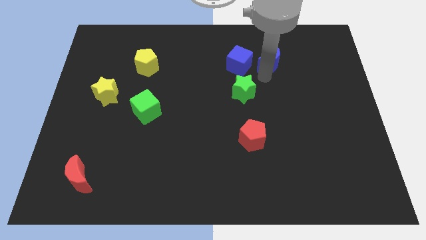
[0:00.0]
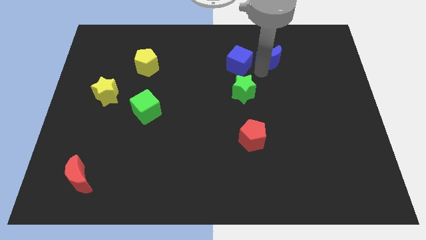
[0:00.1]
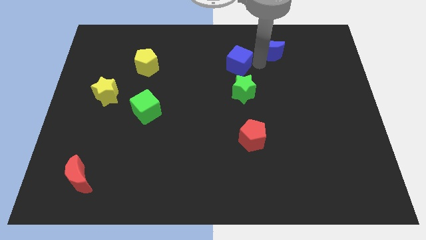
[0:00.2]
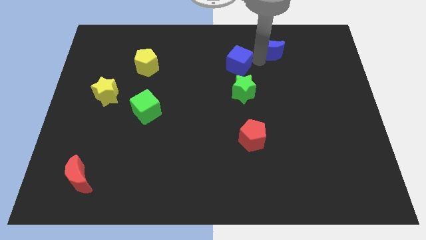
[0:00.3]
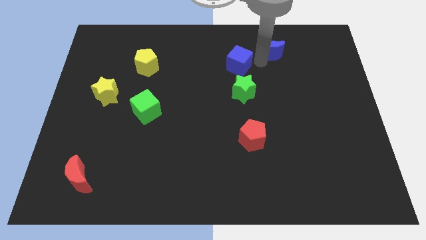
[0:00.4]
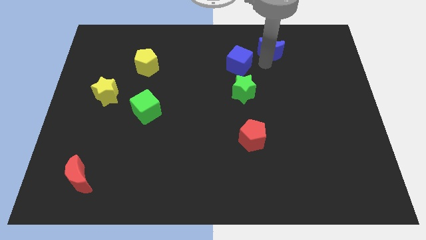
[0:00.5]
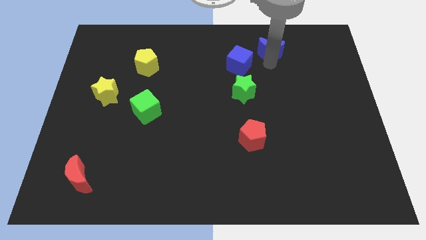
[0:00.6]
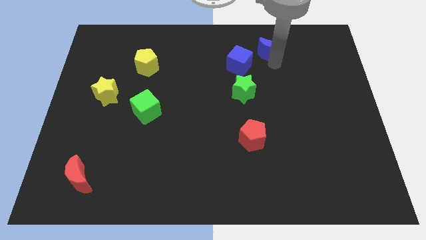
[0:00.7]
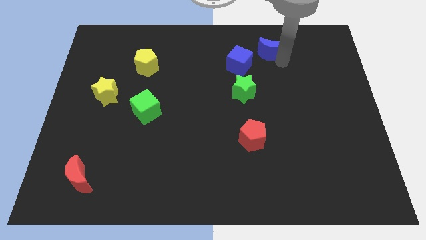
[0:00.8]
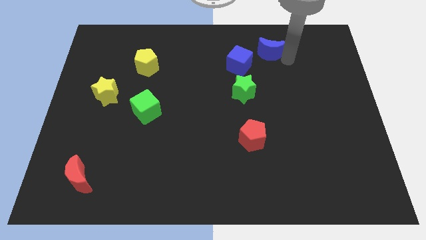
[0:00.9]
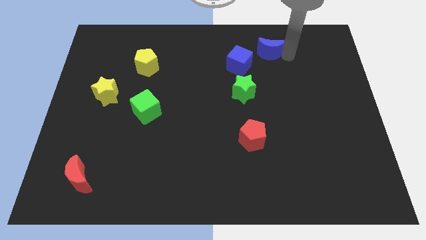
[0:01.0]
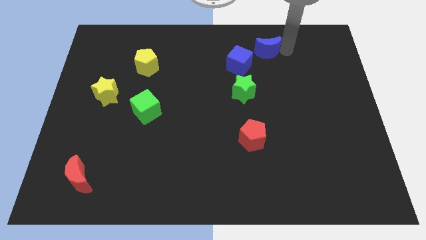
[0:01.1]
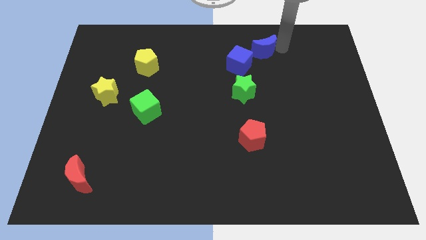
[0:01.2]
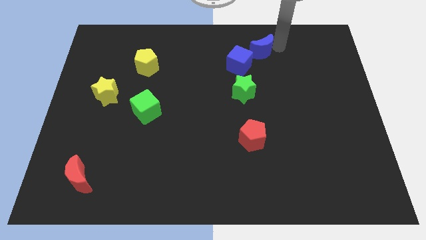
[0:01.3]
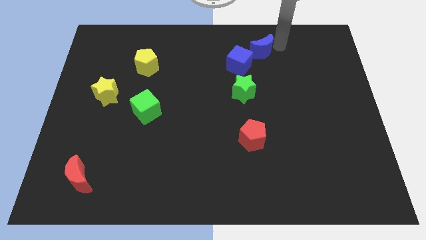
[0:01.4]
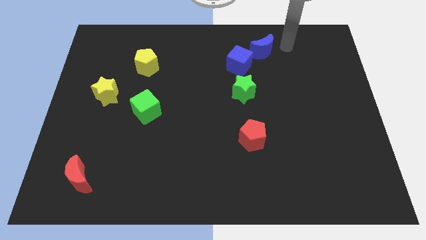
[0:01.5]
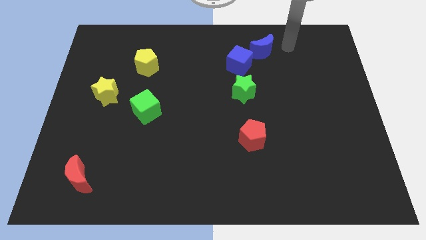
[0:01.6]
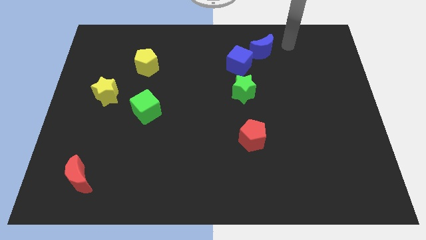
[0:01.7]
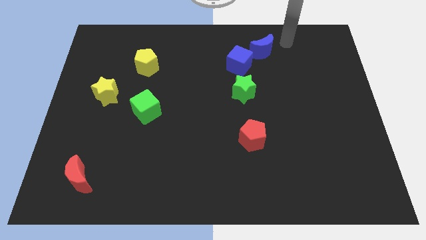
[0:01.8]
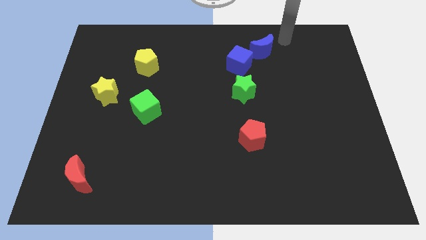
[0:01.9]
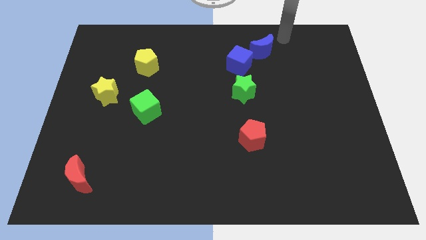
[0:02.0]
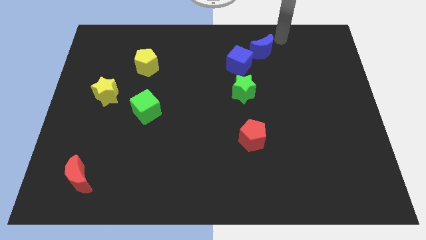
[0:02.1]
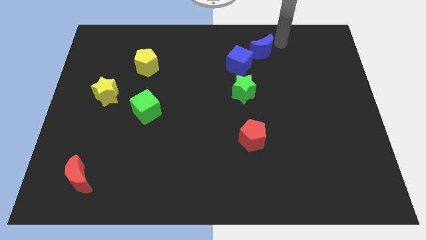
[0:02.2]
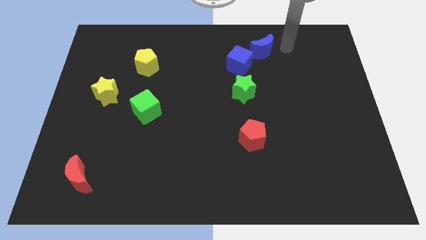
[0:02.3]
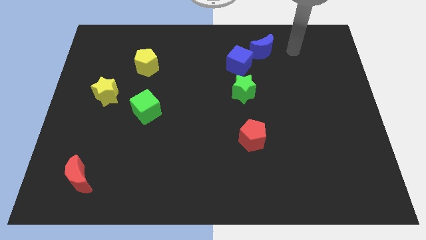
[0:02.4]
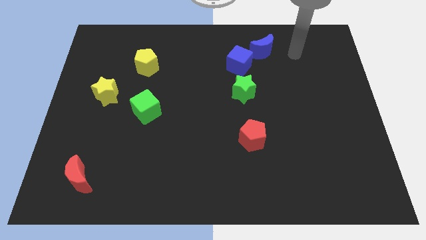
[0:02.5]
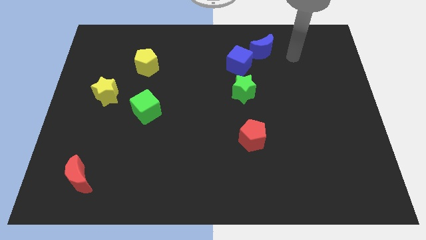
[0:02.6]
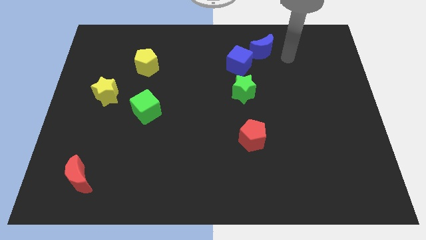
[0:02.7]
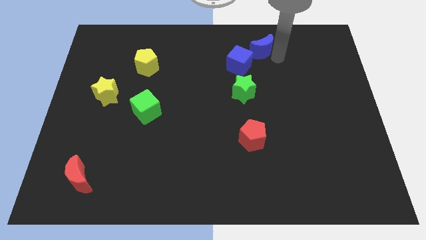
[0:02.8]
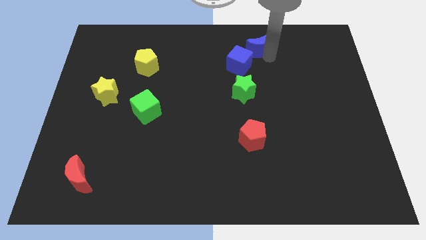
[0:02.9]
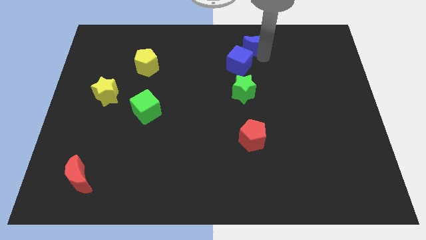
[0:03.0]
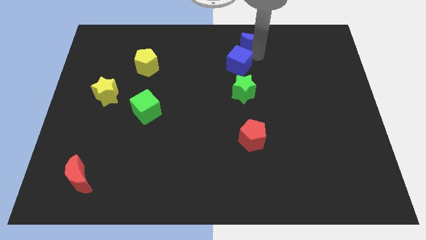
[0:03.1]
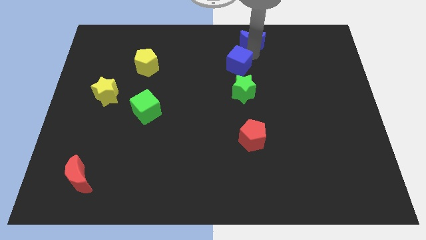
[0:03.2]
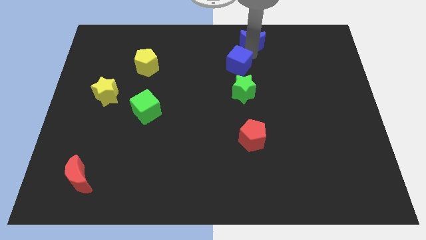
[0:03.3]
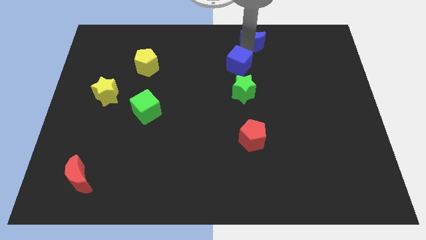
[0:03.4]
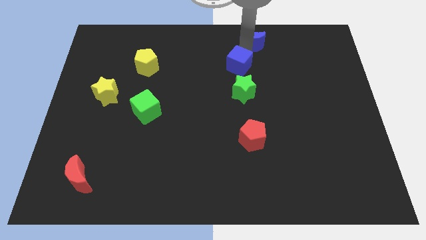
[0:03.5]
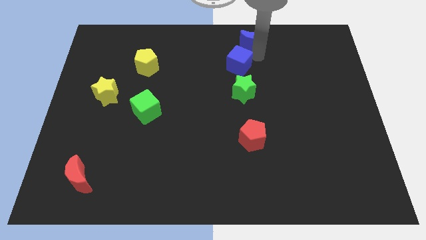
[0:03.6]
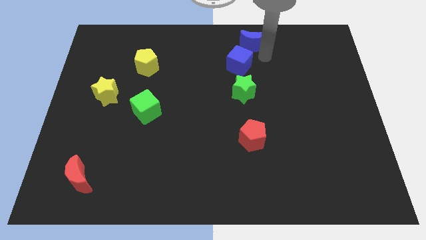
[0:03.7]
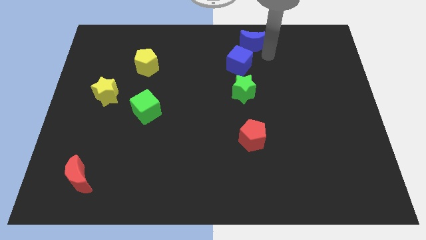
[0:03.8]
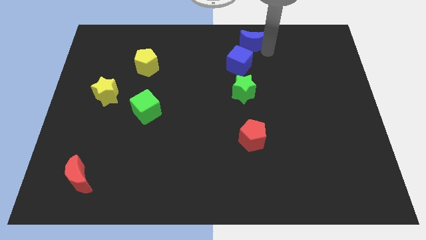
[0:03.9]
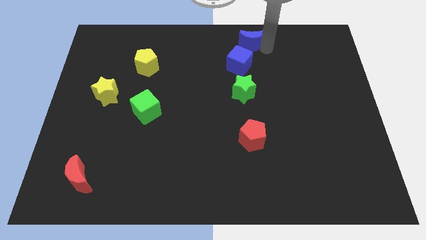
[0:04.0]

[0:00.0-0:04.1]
move the blue crescent above the blue cube

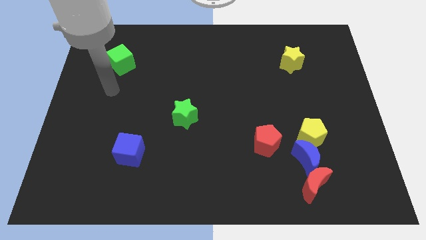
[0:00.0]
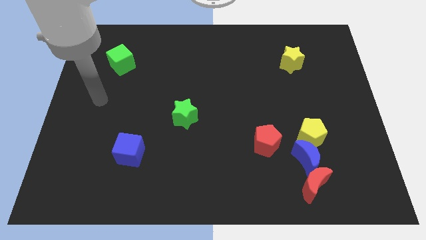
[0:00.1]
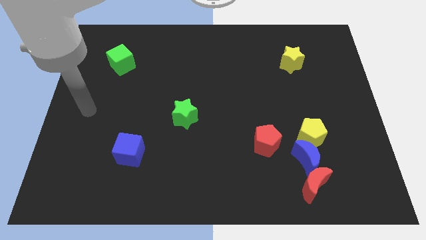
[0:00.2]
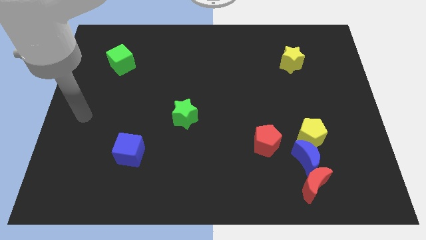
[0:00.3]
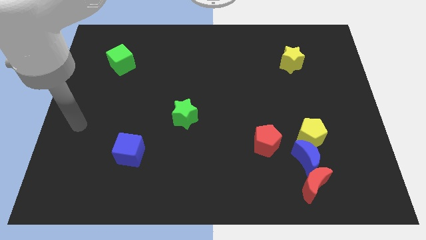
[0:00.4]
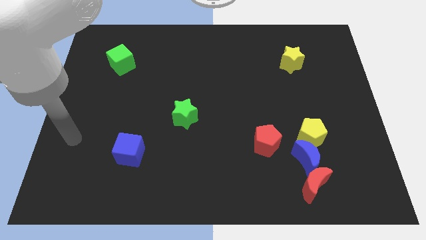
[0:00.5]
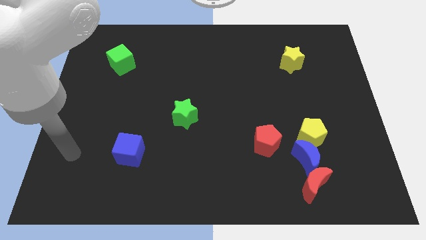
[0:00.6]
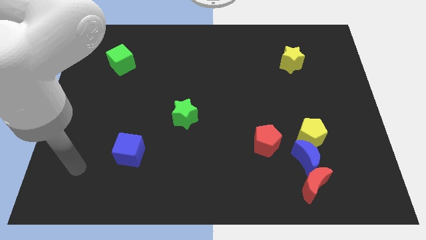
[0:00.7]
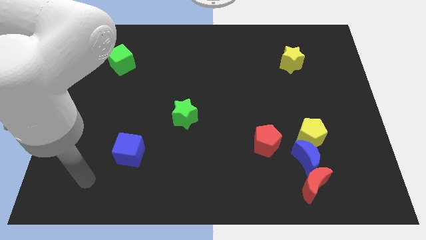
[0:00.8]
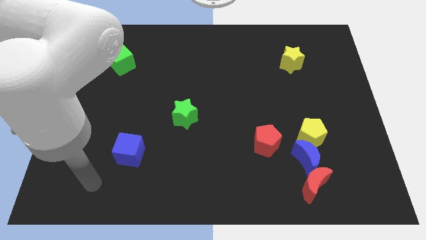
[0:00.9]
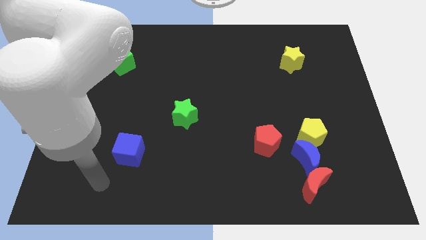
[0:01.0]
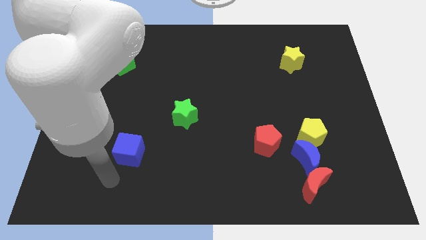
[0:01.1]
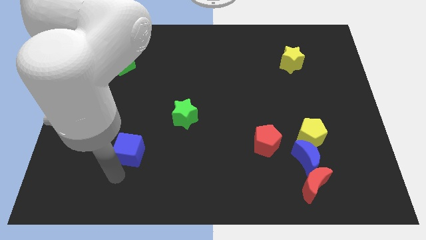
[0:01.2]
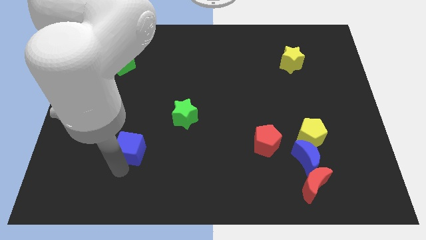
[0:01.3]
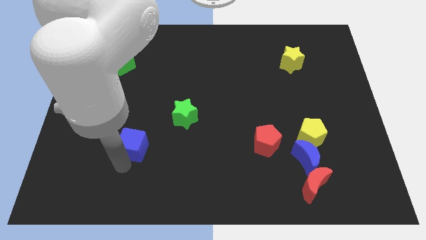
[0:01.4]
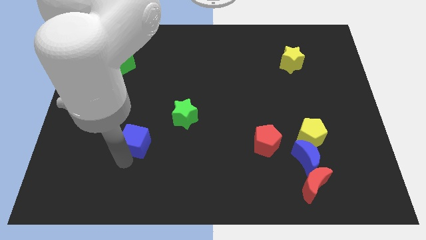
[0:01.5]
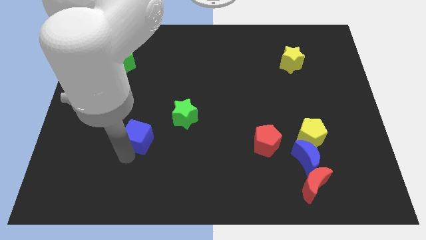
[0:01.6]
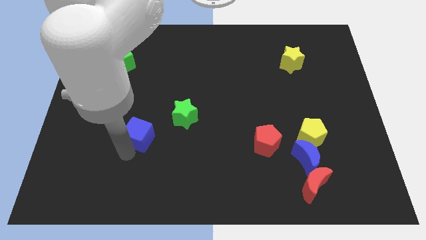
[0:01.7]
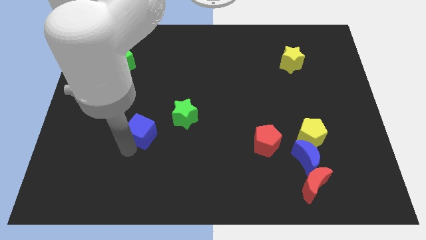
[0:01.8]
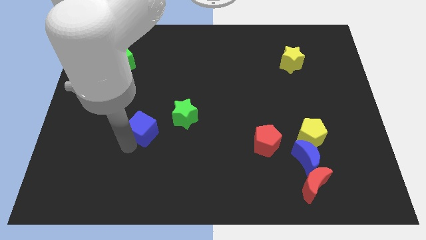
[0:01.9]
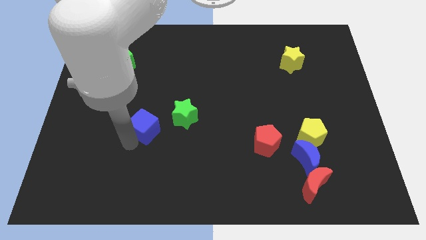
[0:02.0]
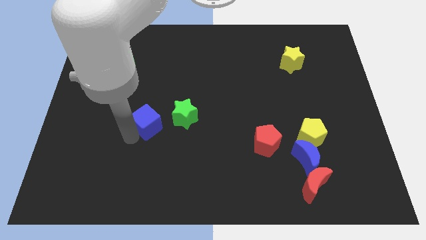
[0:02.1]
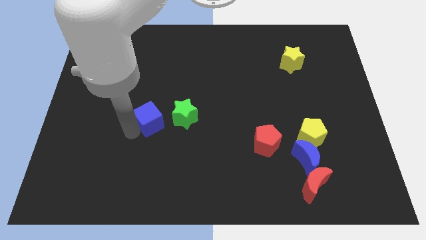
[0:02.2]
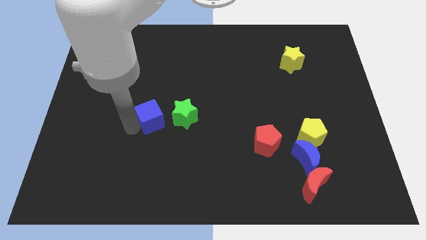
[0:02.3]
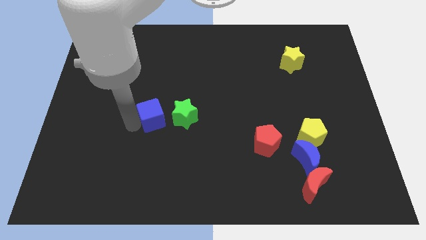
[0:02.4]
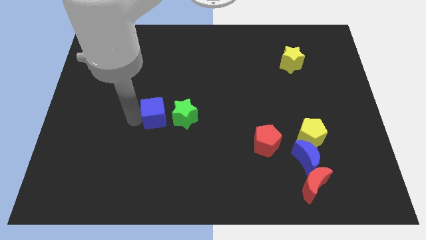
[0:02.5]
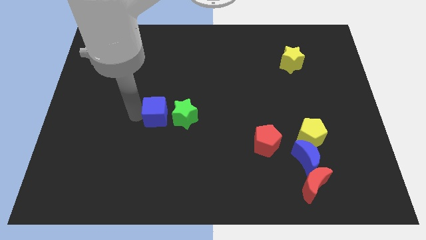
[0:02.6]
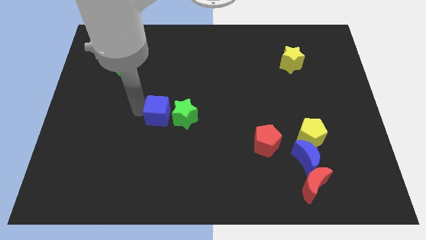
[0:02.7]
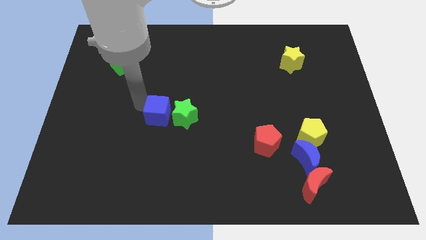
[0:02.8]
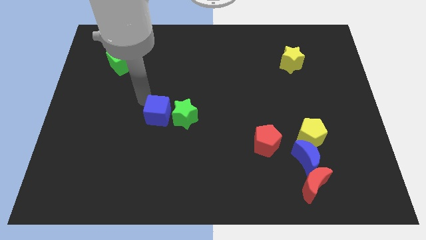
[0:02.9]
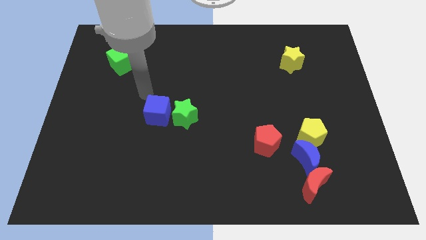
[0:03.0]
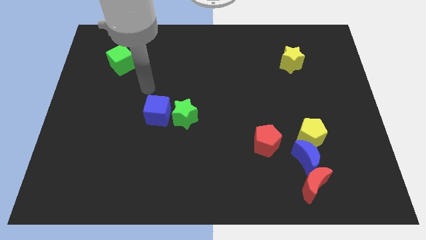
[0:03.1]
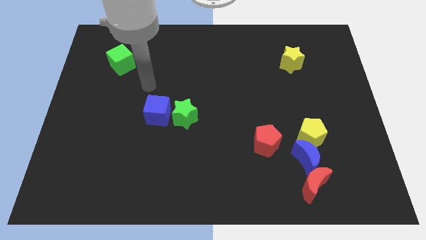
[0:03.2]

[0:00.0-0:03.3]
move the blue cube close to the left side of the green star

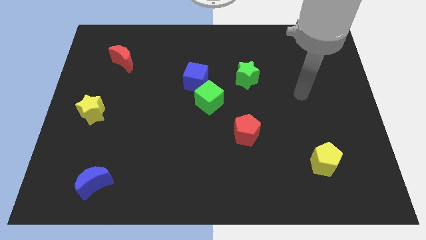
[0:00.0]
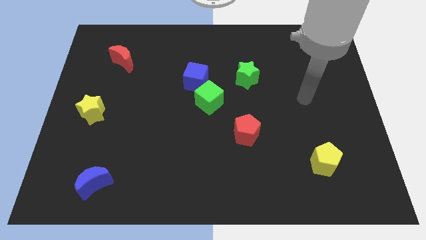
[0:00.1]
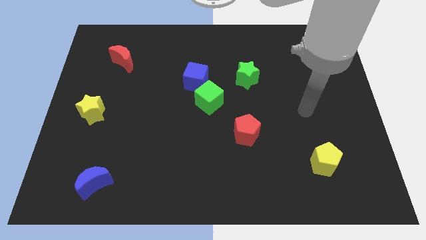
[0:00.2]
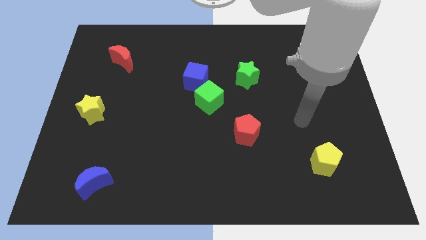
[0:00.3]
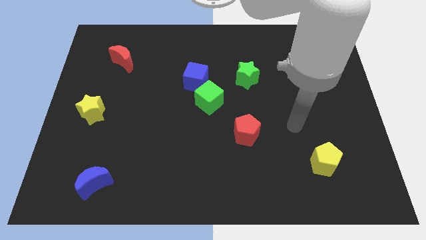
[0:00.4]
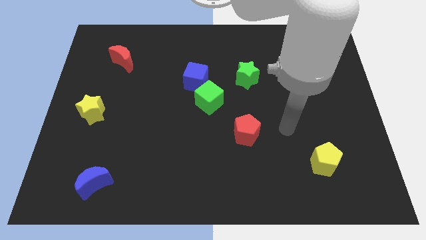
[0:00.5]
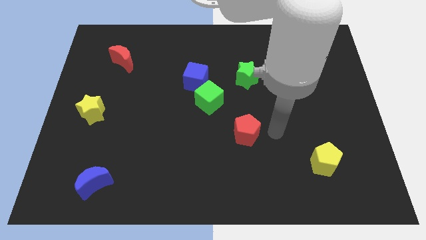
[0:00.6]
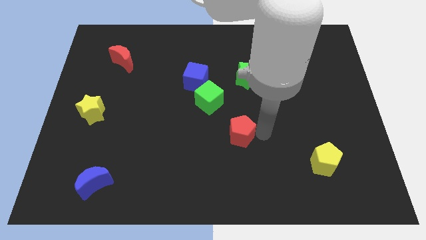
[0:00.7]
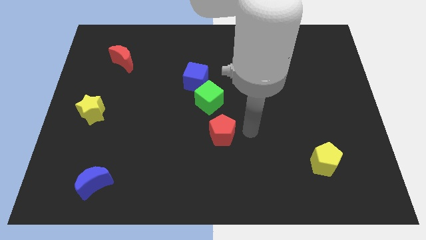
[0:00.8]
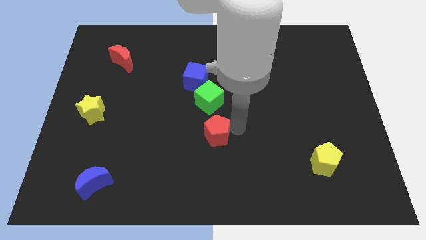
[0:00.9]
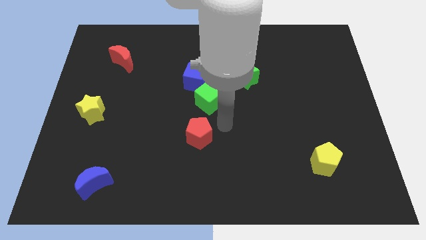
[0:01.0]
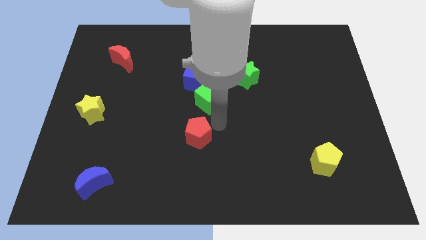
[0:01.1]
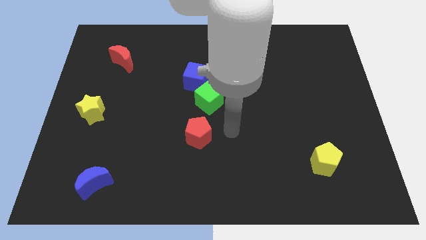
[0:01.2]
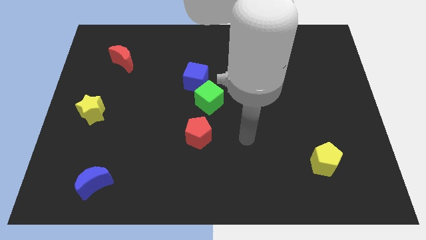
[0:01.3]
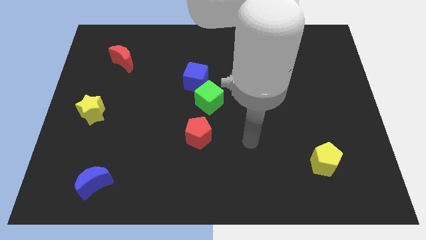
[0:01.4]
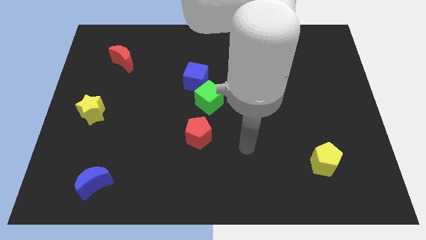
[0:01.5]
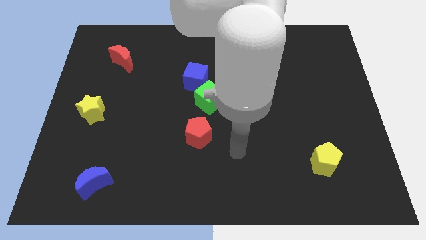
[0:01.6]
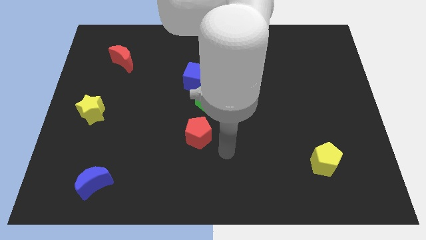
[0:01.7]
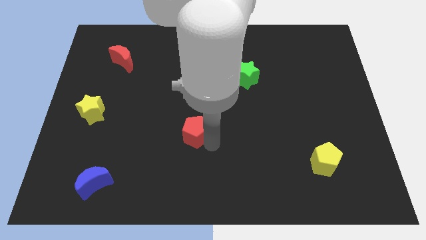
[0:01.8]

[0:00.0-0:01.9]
slightly push the red pentagon to the left
